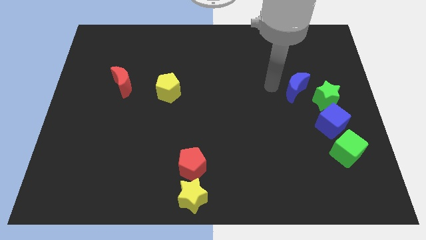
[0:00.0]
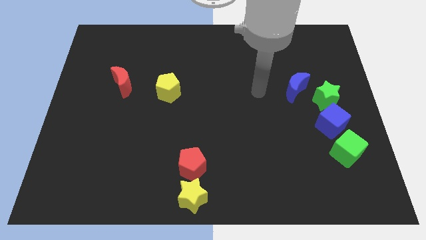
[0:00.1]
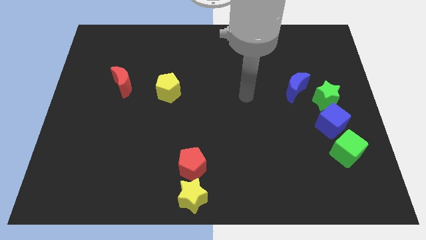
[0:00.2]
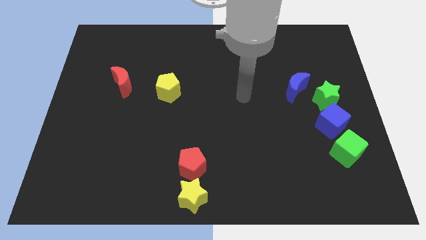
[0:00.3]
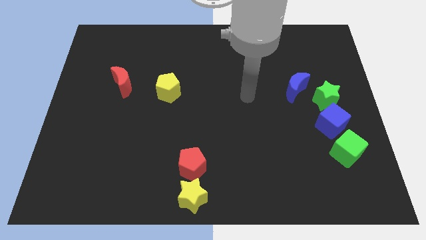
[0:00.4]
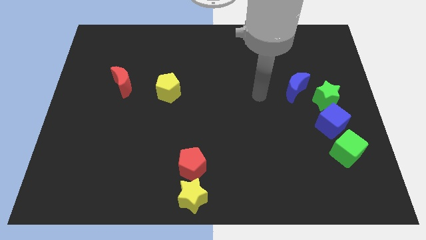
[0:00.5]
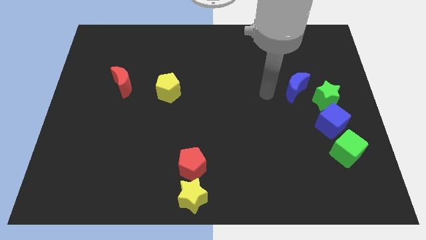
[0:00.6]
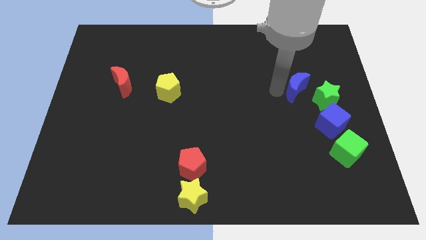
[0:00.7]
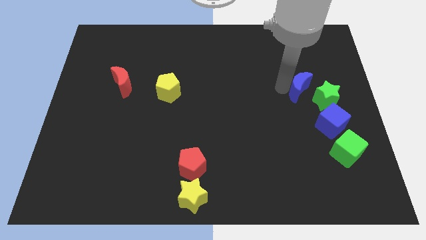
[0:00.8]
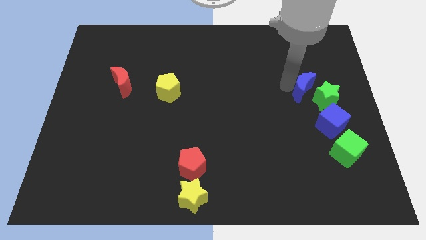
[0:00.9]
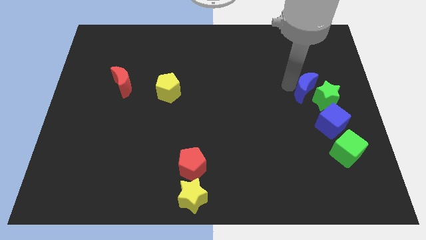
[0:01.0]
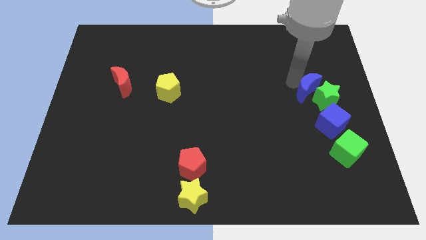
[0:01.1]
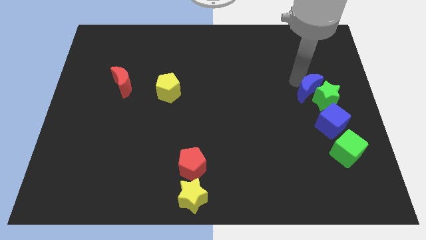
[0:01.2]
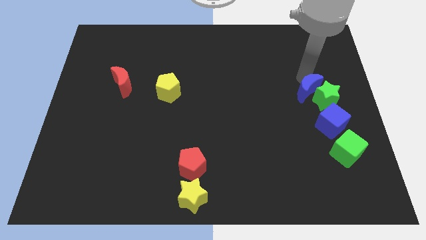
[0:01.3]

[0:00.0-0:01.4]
push the blue crescent top left to the green star

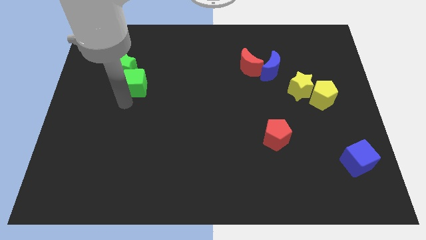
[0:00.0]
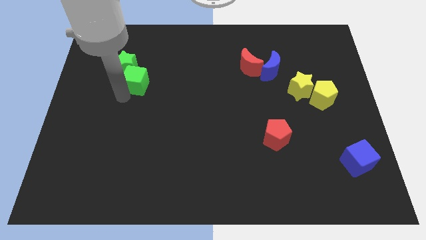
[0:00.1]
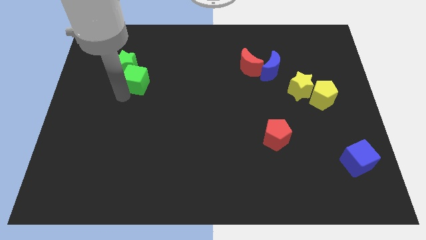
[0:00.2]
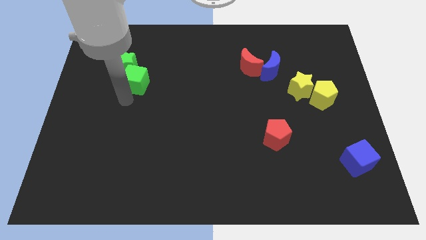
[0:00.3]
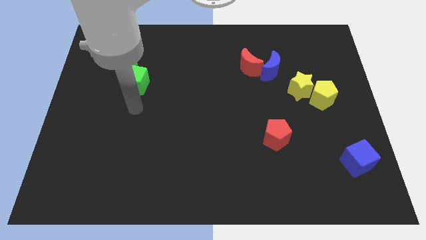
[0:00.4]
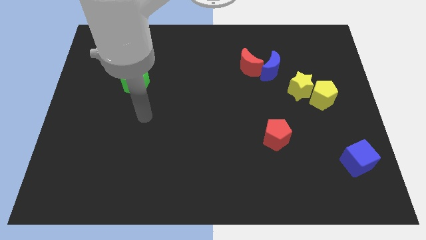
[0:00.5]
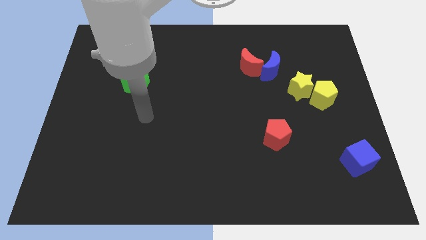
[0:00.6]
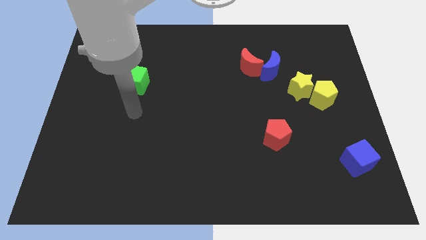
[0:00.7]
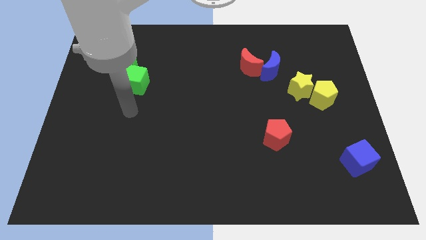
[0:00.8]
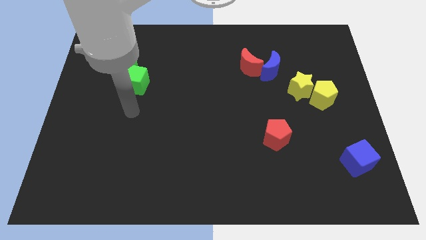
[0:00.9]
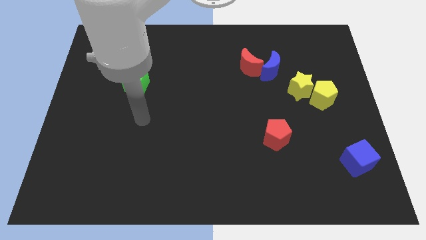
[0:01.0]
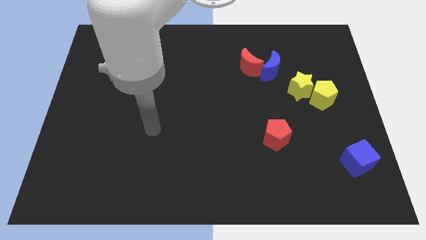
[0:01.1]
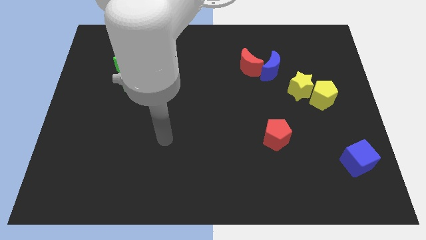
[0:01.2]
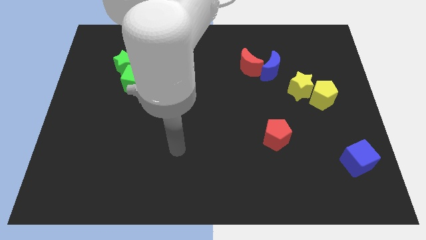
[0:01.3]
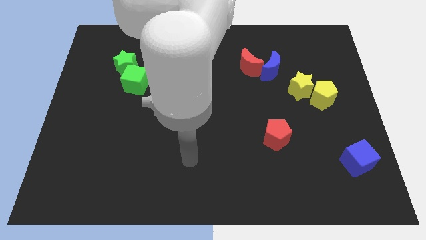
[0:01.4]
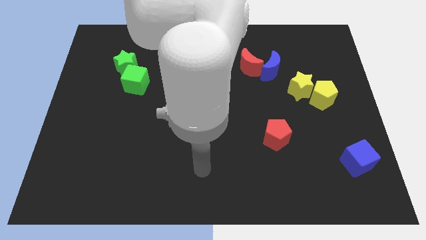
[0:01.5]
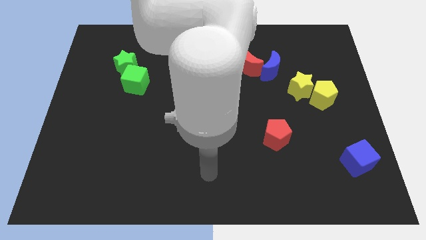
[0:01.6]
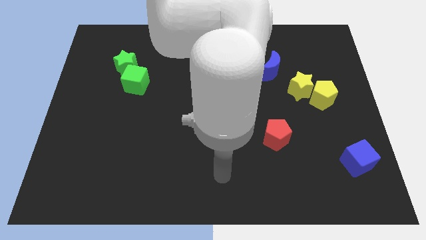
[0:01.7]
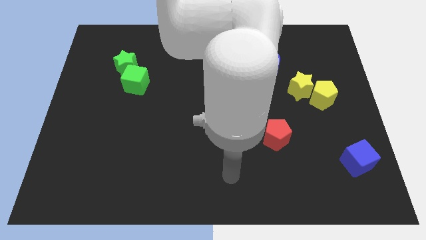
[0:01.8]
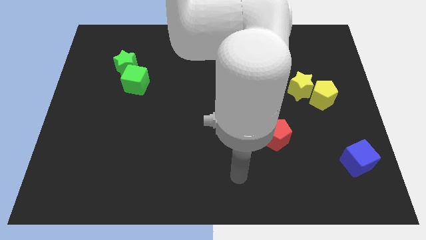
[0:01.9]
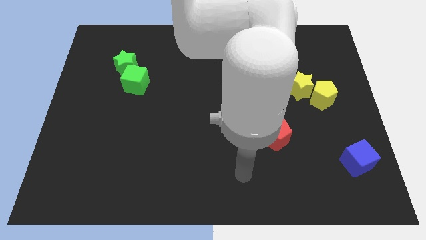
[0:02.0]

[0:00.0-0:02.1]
move yourself away from the green cube

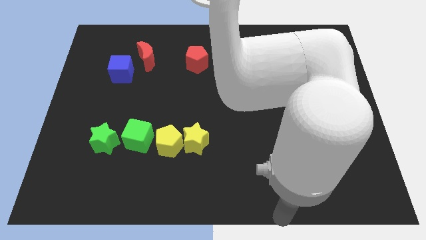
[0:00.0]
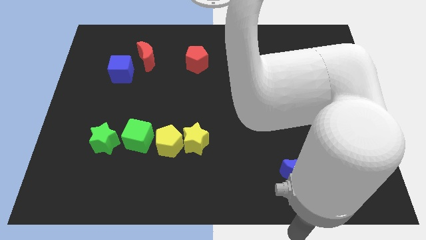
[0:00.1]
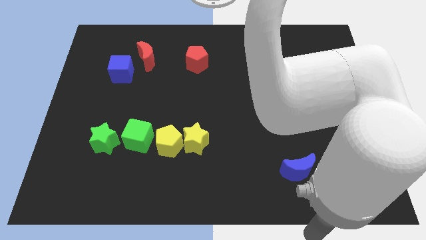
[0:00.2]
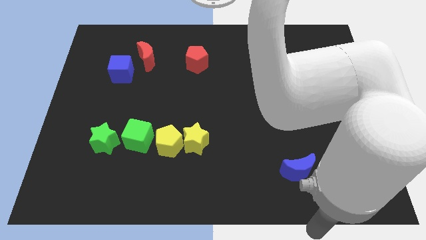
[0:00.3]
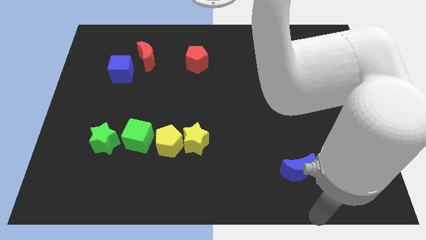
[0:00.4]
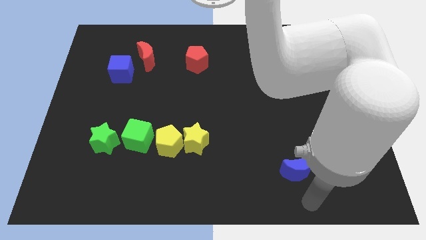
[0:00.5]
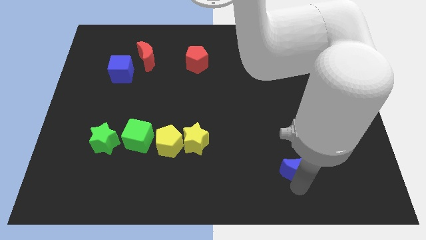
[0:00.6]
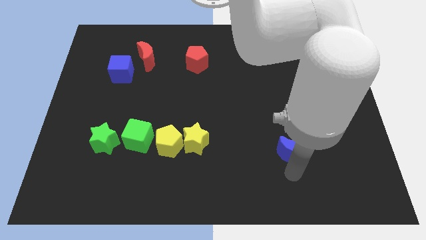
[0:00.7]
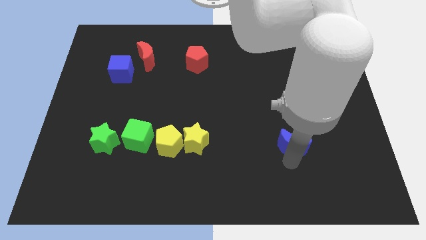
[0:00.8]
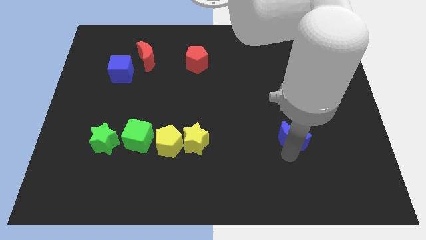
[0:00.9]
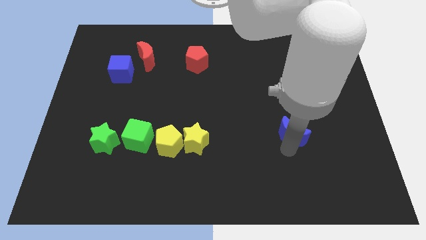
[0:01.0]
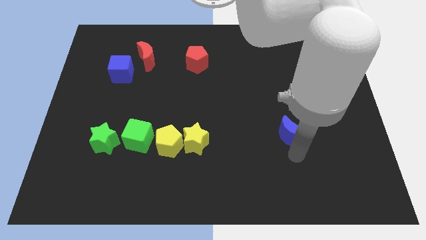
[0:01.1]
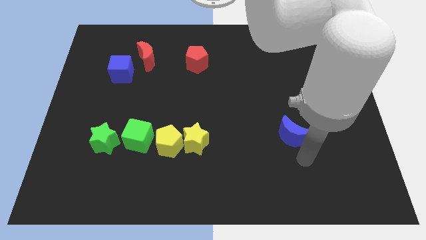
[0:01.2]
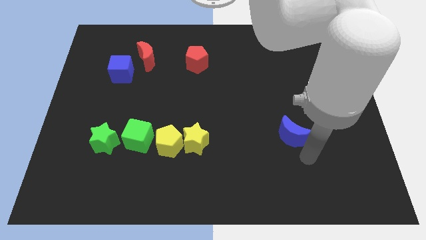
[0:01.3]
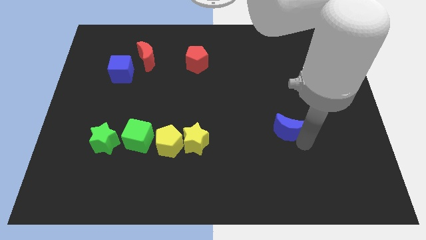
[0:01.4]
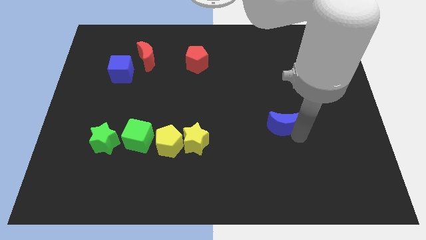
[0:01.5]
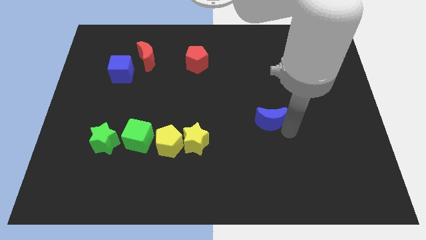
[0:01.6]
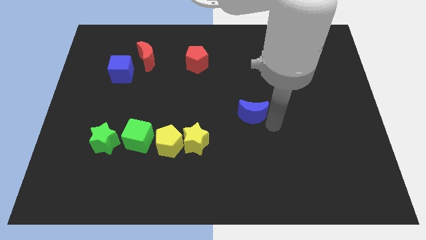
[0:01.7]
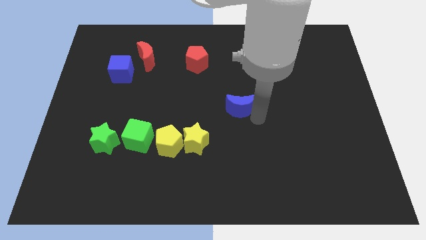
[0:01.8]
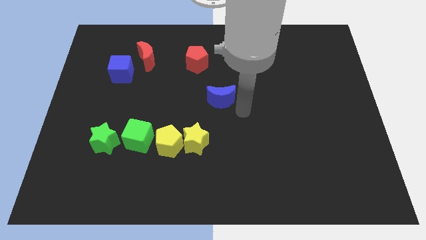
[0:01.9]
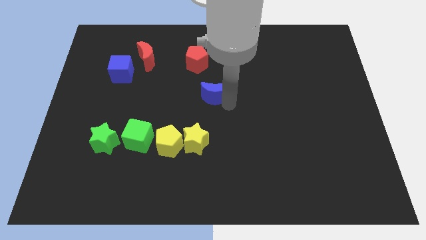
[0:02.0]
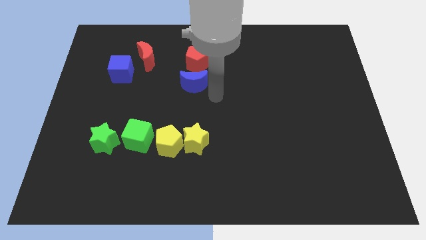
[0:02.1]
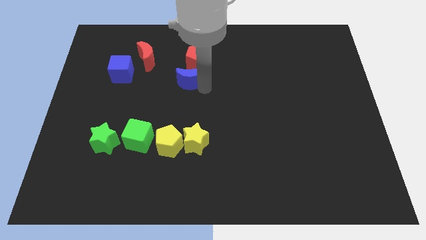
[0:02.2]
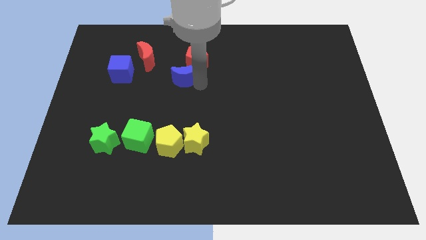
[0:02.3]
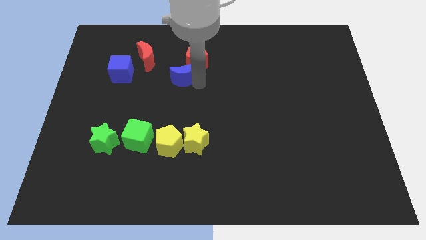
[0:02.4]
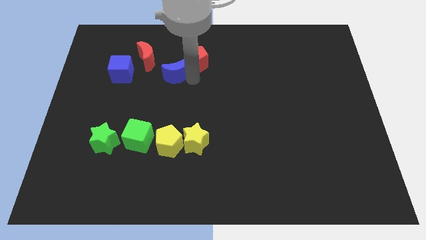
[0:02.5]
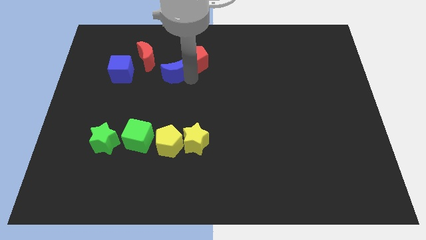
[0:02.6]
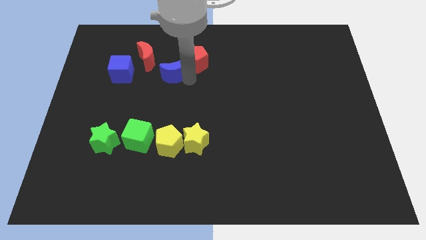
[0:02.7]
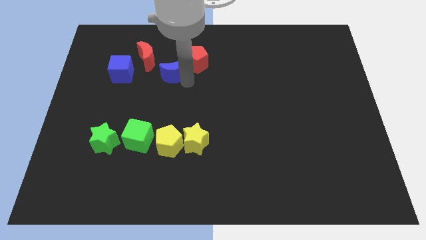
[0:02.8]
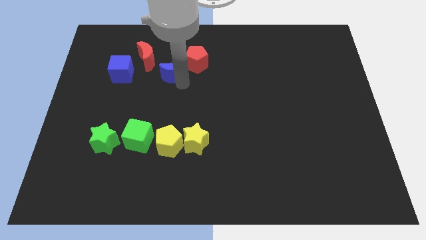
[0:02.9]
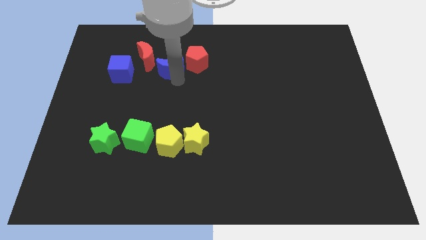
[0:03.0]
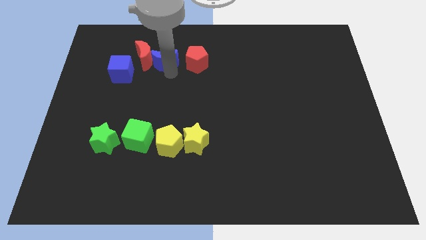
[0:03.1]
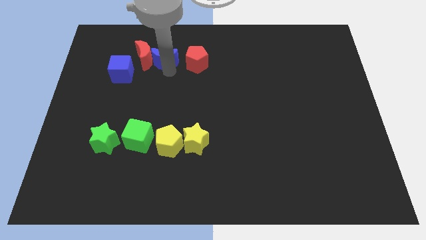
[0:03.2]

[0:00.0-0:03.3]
place the blue crescent beside the red crescent

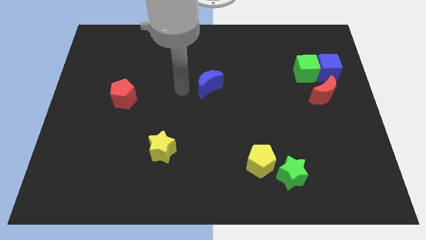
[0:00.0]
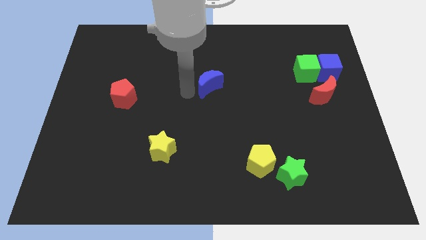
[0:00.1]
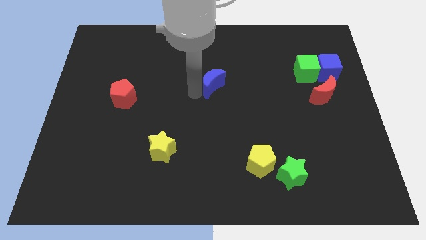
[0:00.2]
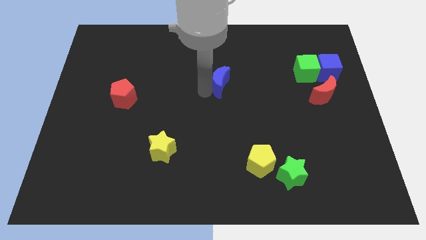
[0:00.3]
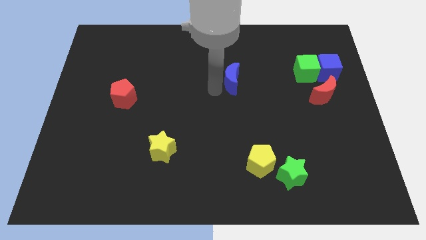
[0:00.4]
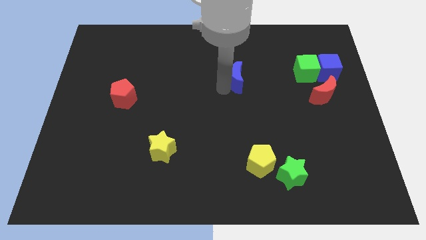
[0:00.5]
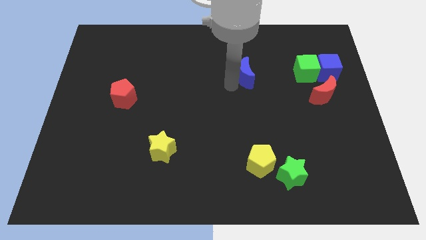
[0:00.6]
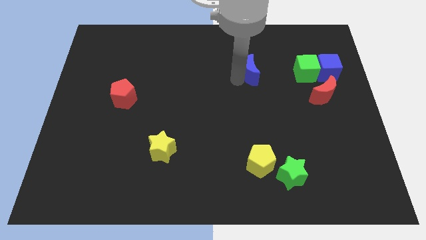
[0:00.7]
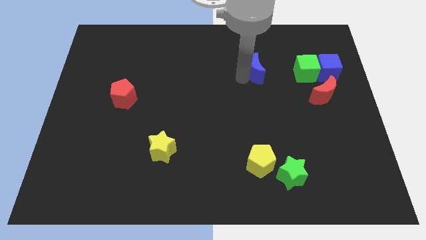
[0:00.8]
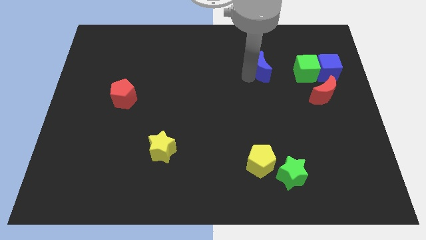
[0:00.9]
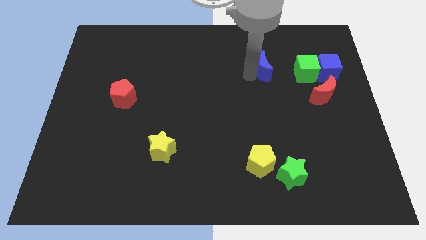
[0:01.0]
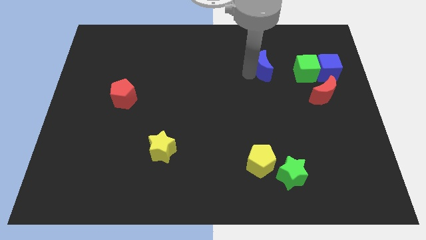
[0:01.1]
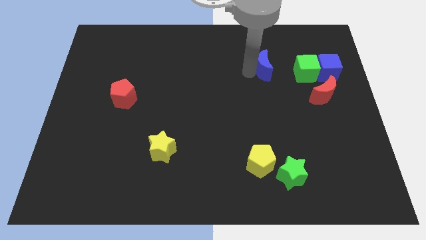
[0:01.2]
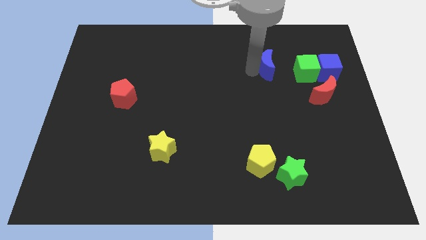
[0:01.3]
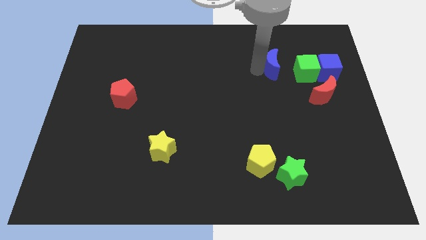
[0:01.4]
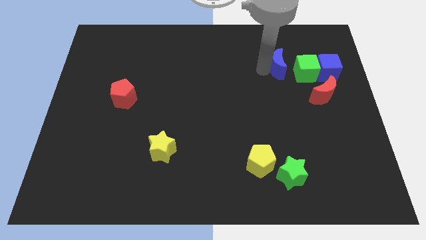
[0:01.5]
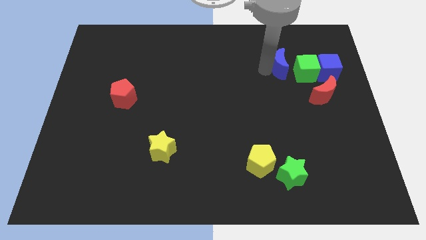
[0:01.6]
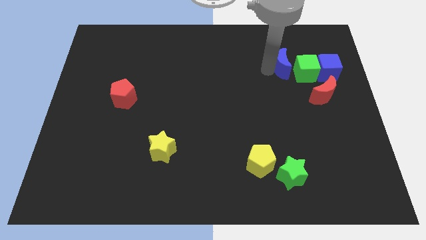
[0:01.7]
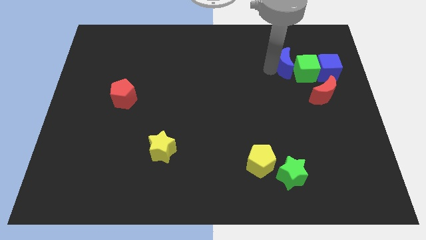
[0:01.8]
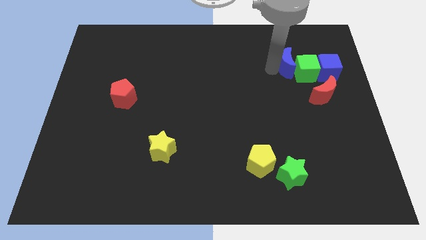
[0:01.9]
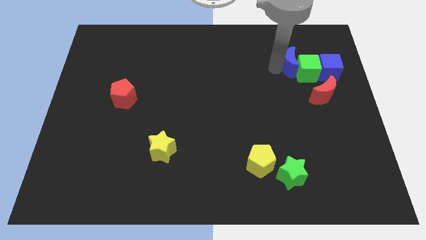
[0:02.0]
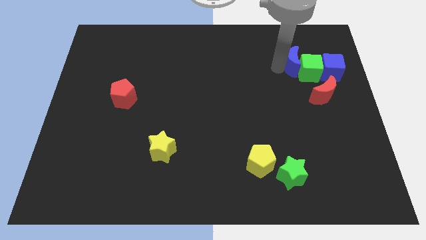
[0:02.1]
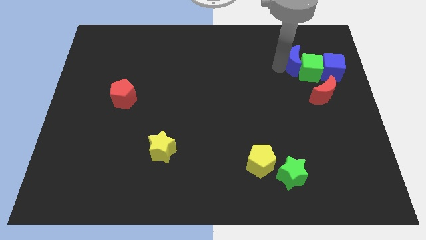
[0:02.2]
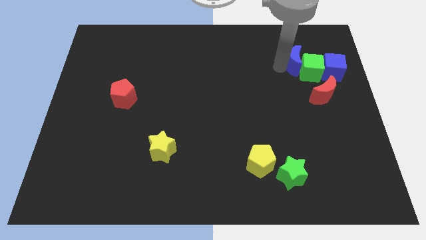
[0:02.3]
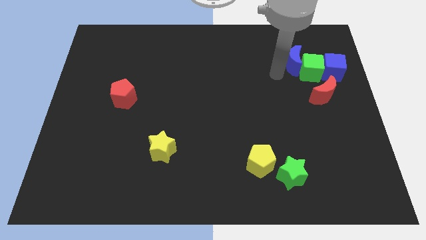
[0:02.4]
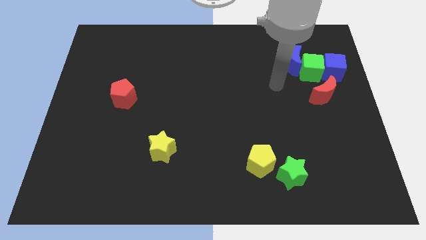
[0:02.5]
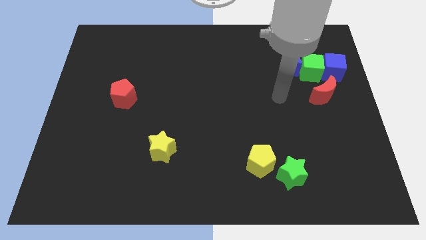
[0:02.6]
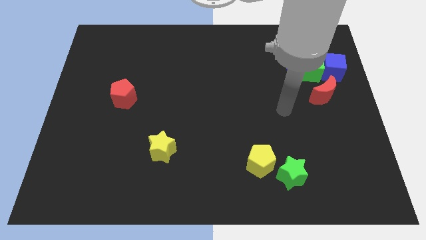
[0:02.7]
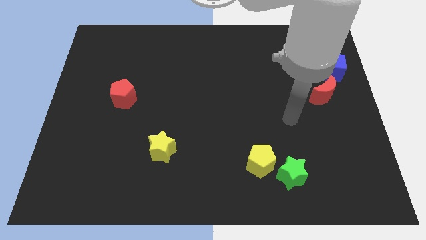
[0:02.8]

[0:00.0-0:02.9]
push the blue blocks and green cube towards the right side of the board
